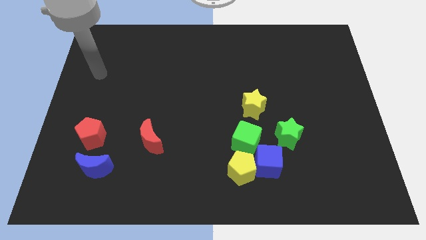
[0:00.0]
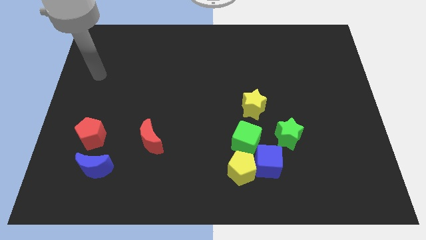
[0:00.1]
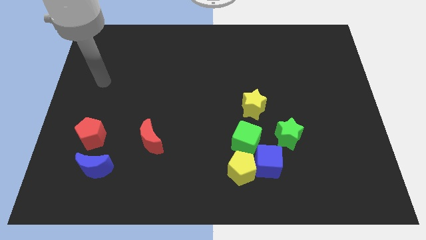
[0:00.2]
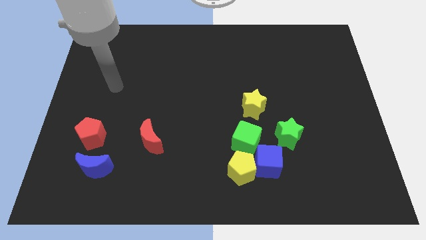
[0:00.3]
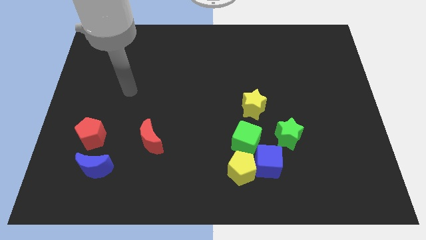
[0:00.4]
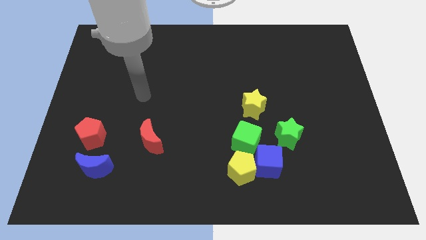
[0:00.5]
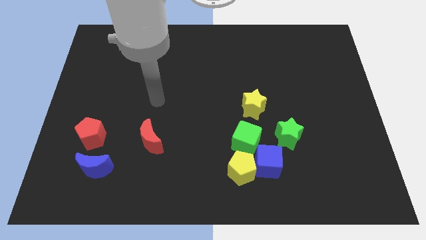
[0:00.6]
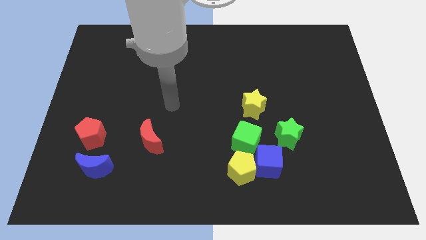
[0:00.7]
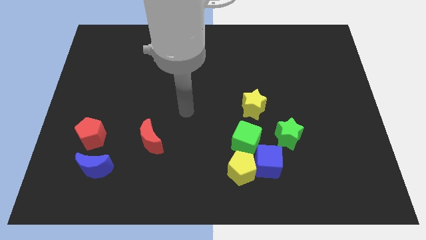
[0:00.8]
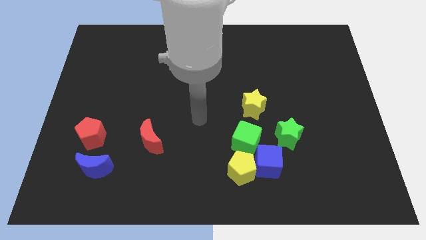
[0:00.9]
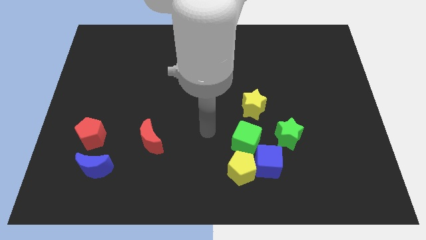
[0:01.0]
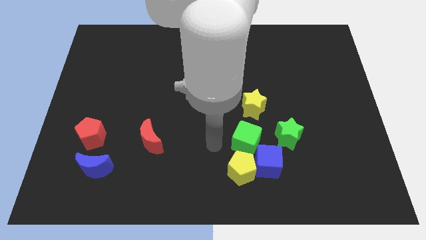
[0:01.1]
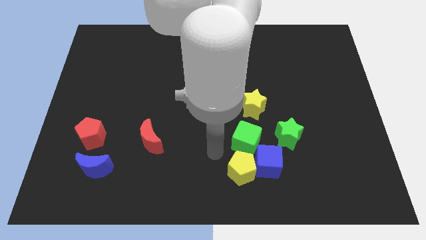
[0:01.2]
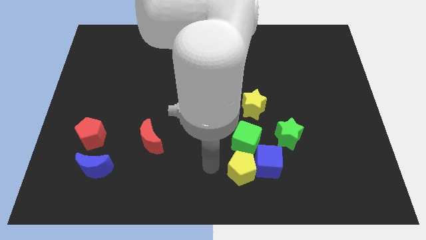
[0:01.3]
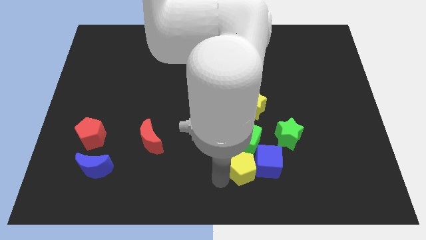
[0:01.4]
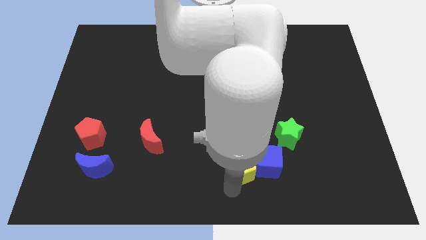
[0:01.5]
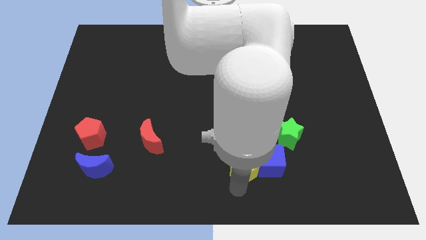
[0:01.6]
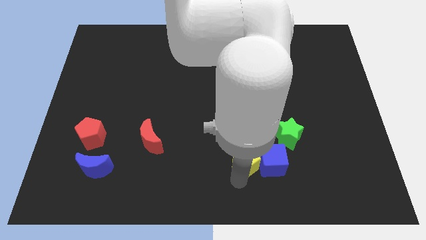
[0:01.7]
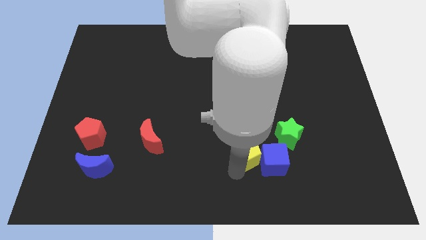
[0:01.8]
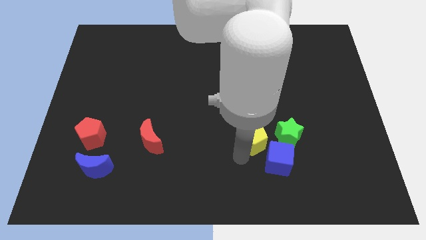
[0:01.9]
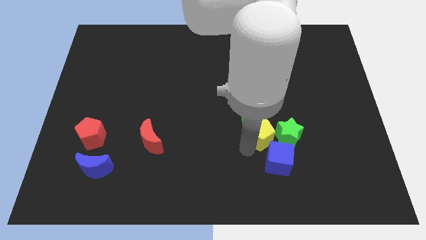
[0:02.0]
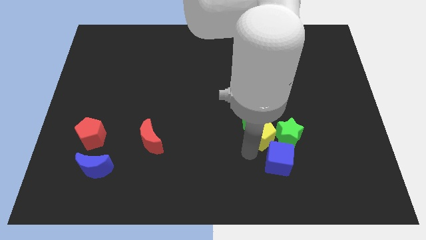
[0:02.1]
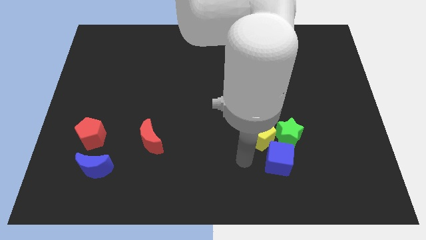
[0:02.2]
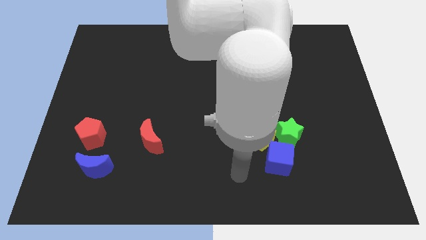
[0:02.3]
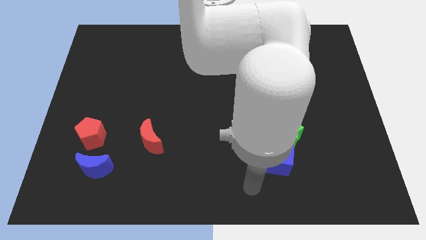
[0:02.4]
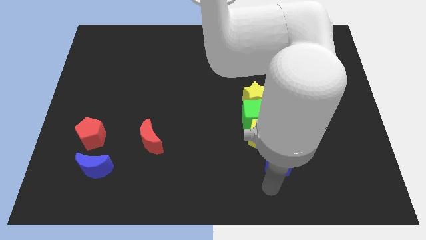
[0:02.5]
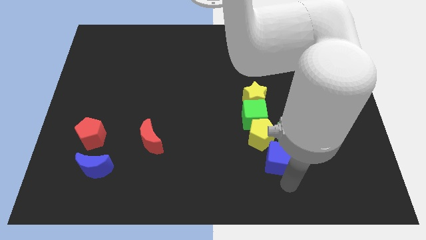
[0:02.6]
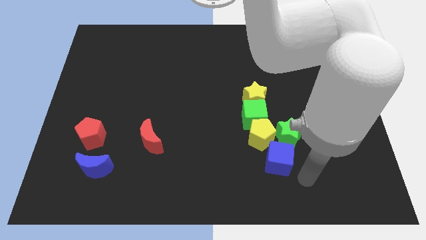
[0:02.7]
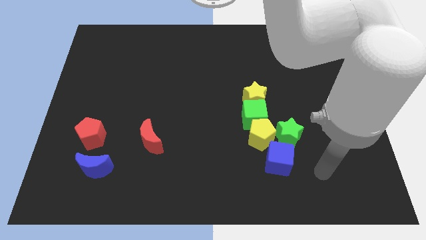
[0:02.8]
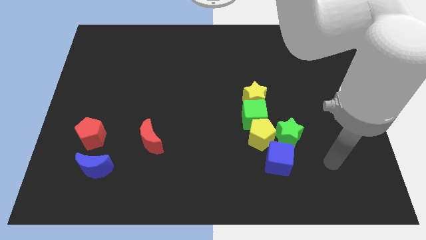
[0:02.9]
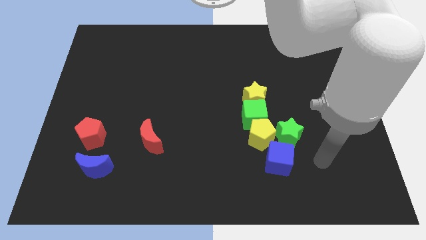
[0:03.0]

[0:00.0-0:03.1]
place the arm to the right of the blue cube

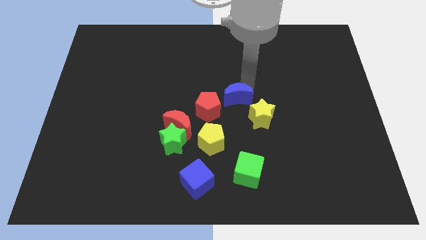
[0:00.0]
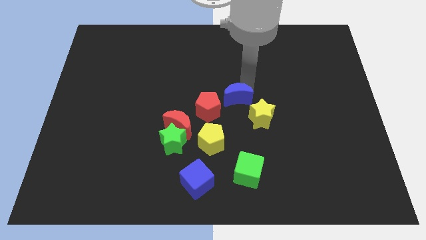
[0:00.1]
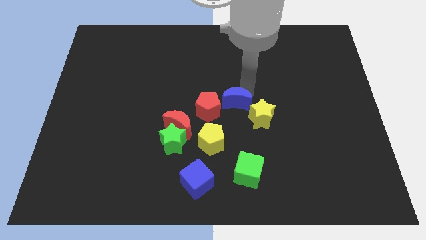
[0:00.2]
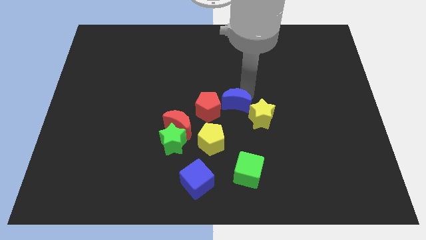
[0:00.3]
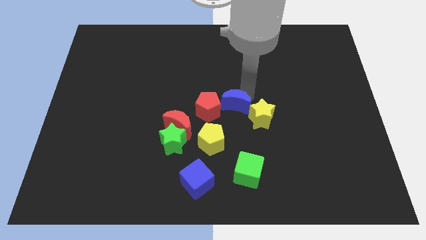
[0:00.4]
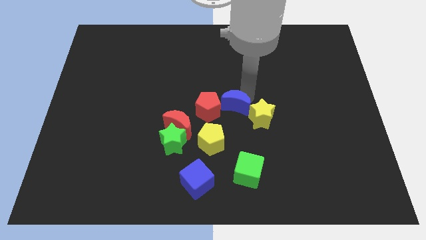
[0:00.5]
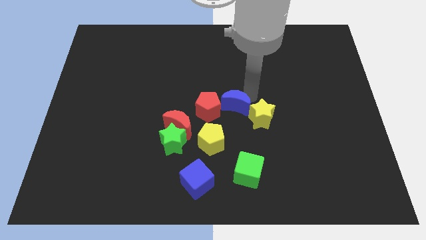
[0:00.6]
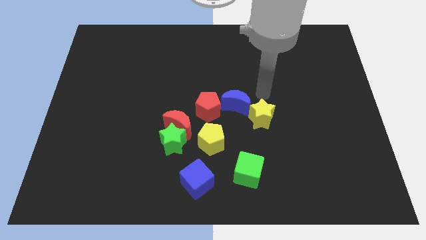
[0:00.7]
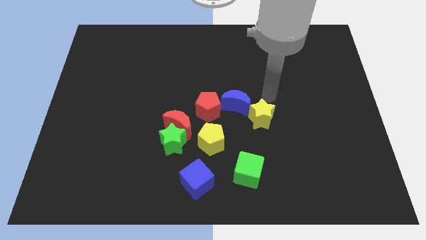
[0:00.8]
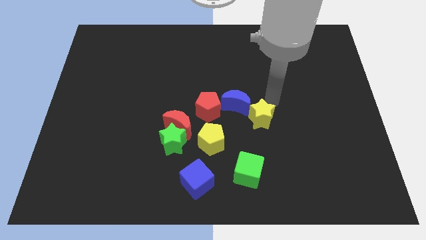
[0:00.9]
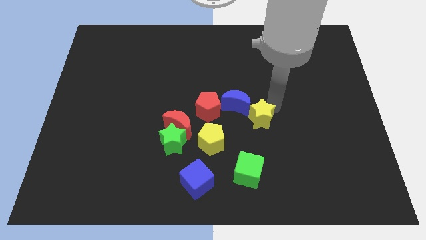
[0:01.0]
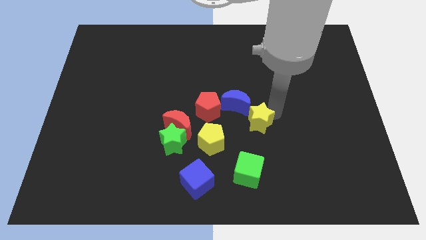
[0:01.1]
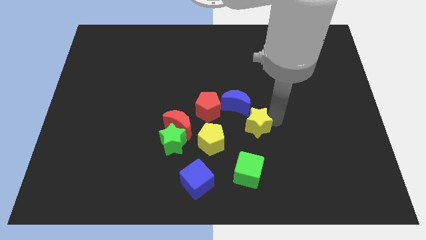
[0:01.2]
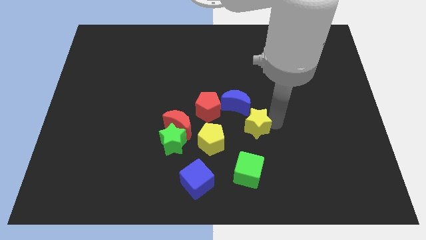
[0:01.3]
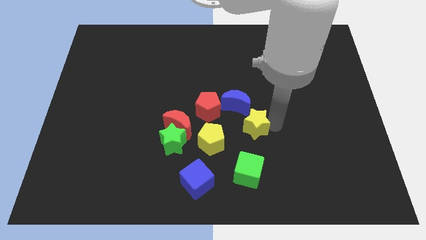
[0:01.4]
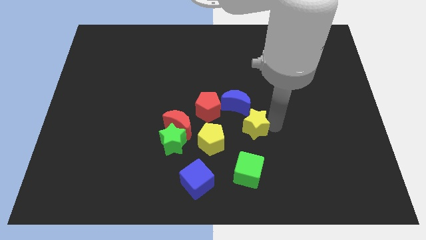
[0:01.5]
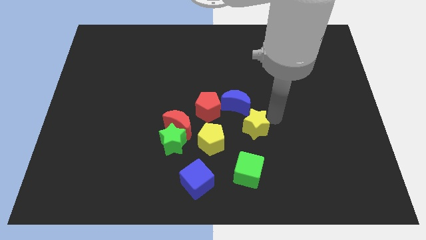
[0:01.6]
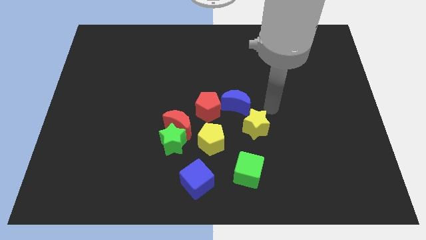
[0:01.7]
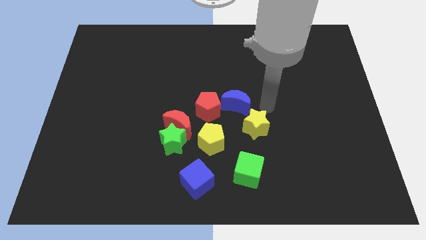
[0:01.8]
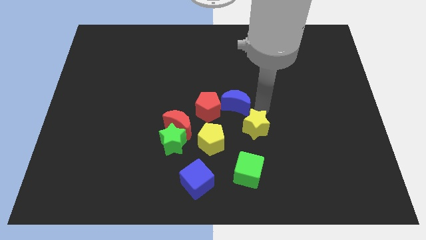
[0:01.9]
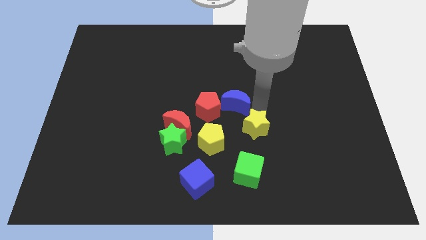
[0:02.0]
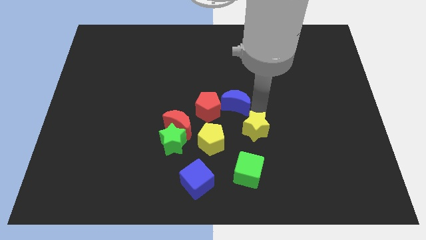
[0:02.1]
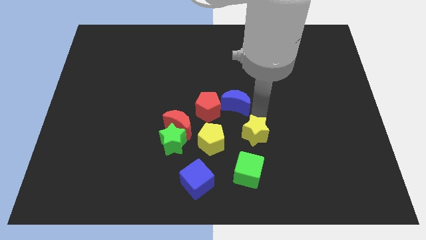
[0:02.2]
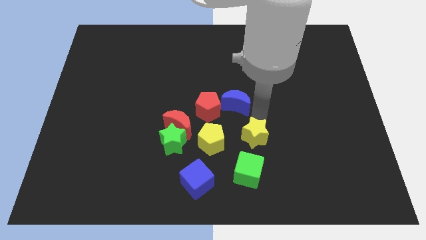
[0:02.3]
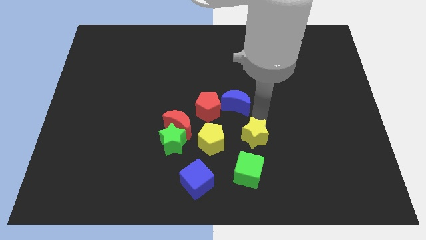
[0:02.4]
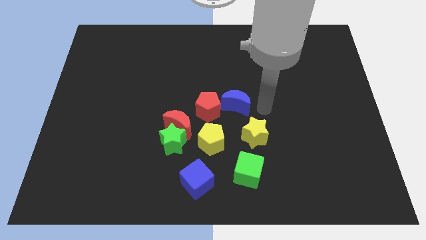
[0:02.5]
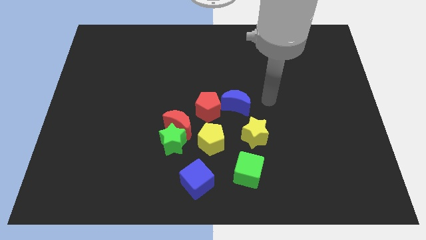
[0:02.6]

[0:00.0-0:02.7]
push yellow star slightly down

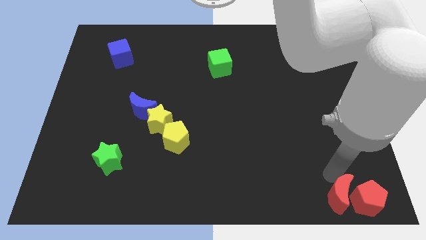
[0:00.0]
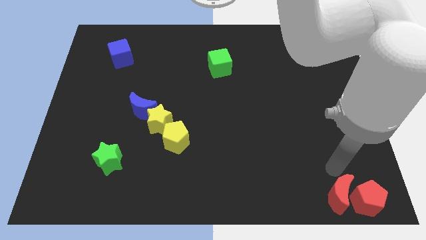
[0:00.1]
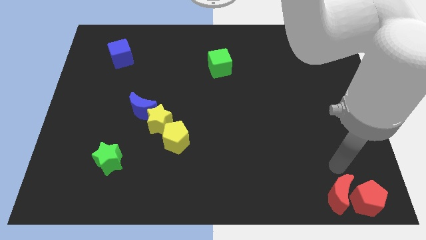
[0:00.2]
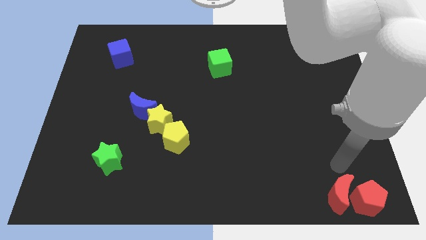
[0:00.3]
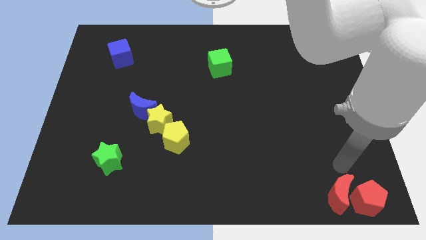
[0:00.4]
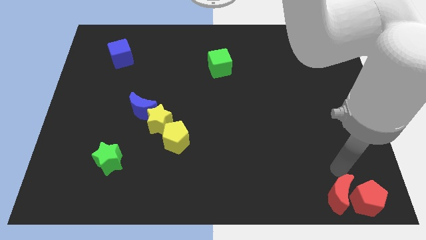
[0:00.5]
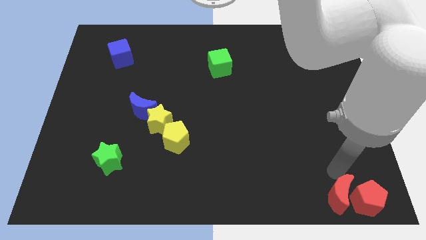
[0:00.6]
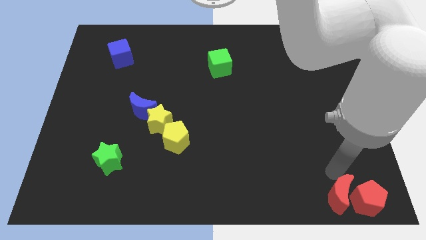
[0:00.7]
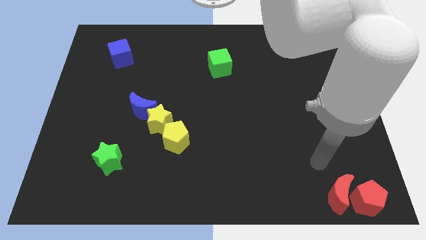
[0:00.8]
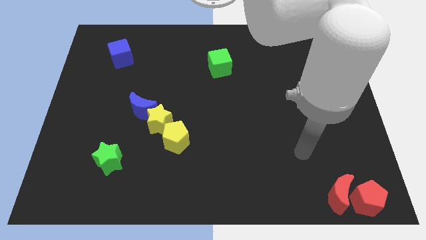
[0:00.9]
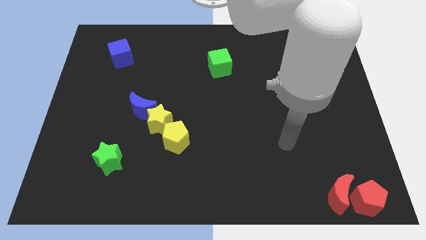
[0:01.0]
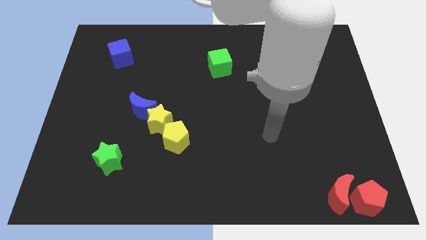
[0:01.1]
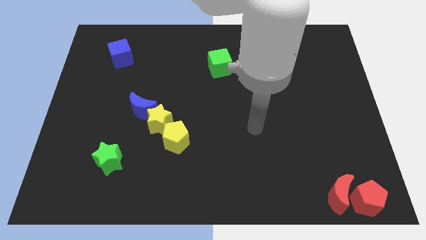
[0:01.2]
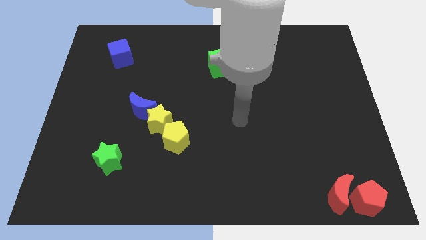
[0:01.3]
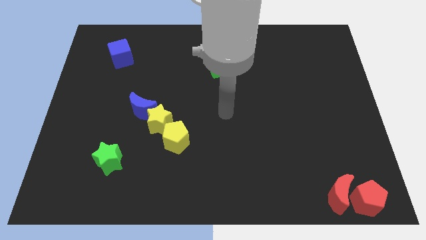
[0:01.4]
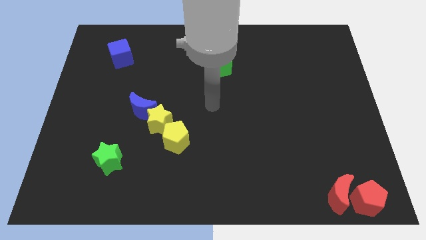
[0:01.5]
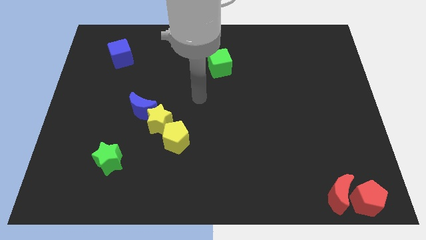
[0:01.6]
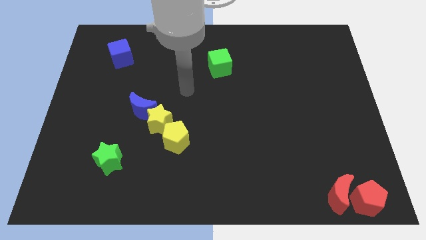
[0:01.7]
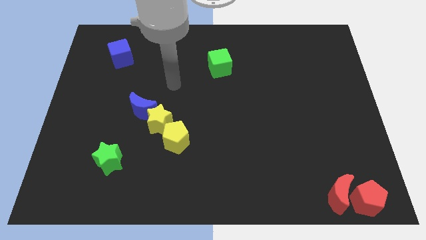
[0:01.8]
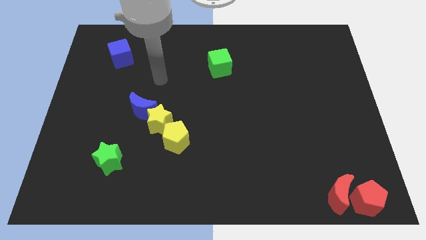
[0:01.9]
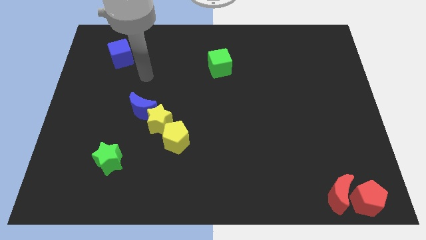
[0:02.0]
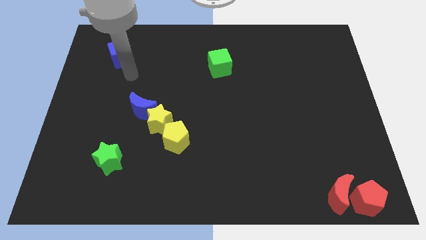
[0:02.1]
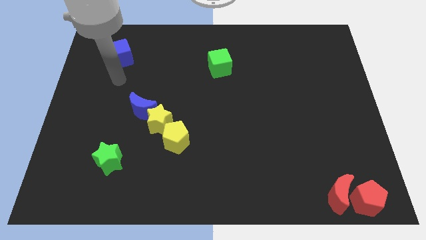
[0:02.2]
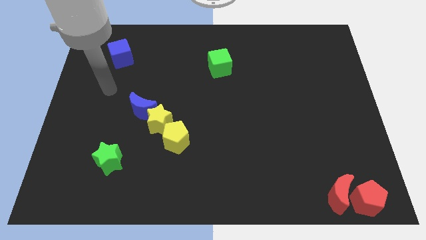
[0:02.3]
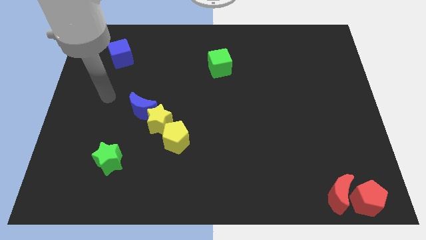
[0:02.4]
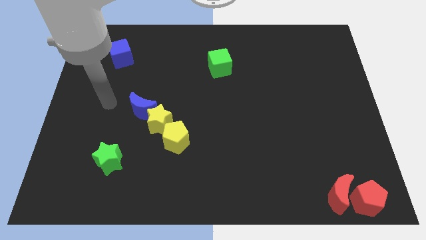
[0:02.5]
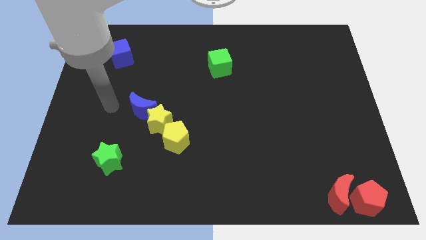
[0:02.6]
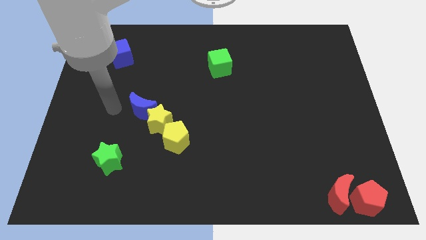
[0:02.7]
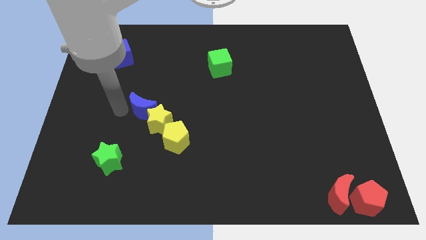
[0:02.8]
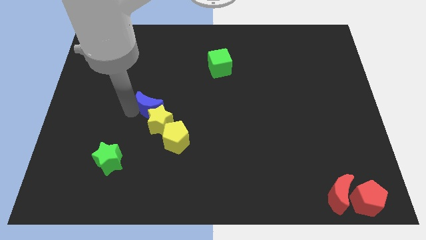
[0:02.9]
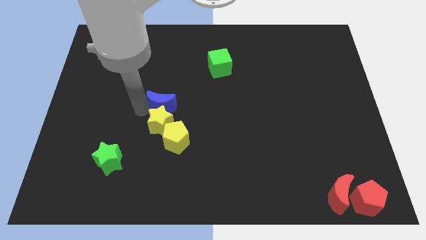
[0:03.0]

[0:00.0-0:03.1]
put the blue crescent on the top of the yellow star
